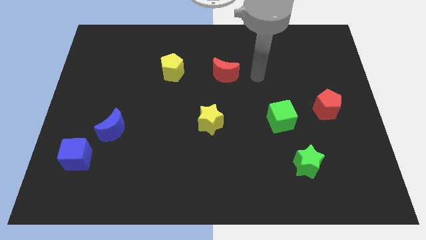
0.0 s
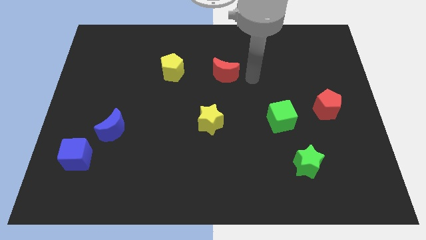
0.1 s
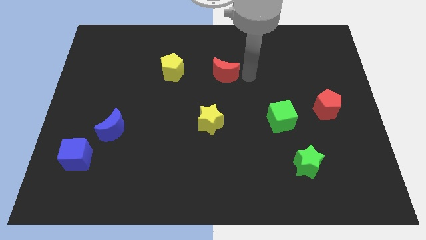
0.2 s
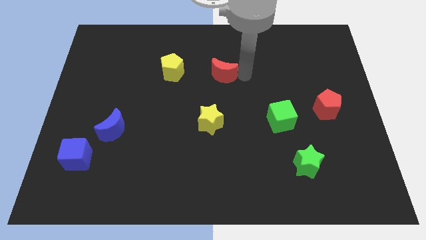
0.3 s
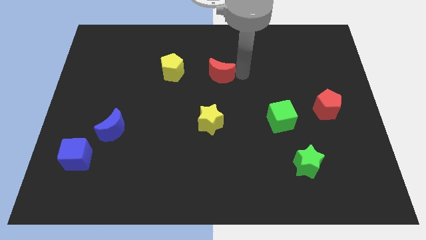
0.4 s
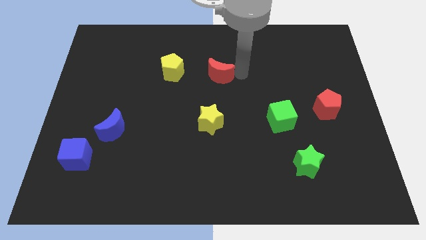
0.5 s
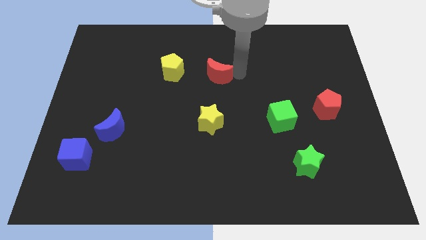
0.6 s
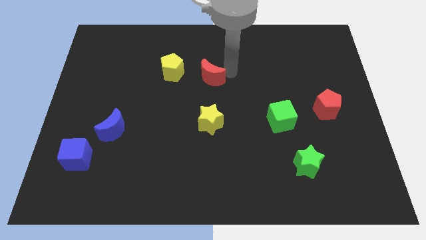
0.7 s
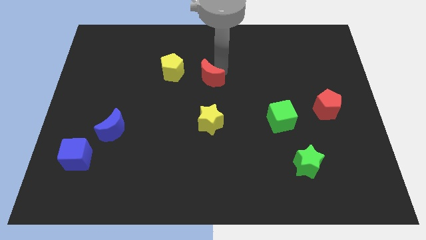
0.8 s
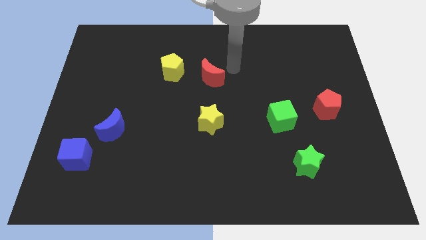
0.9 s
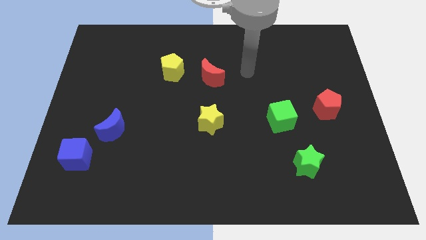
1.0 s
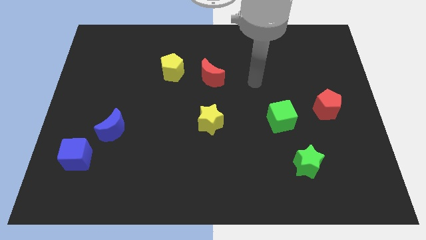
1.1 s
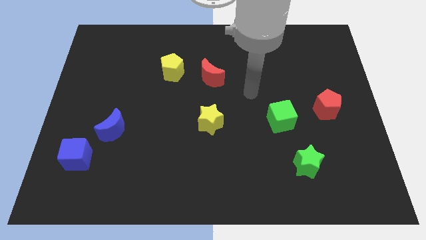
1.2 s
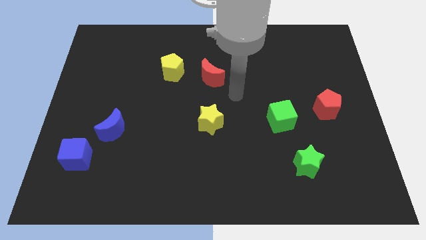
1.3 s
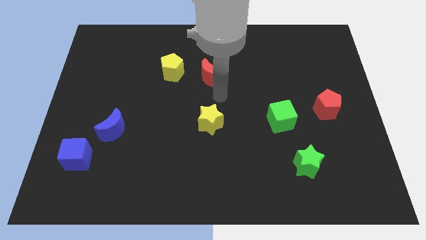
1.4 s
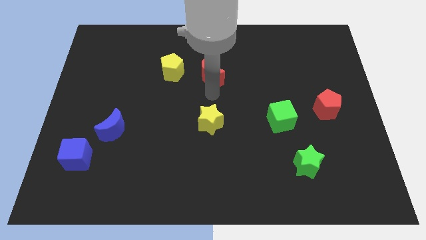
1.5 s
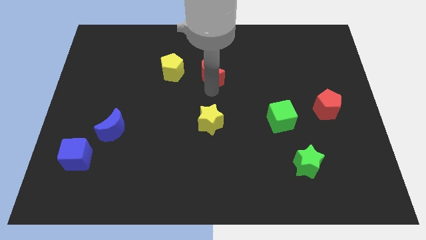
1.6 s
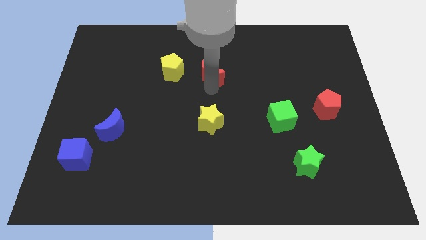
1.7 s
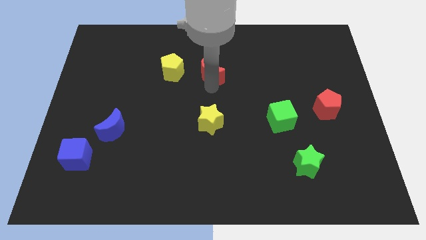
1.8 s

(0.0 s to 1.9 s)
place the red moon to the right side of the yellow pentagon

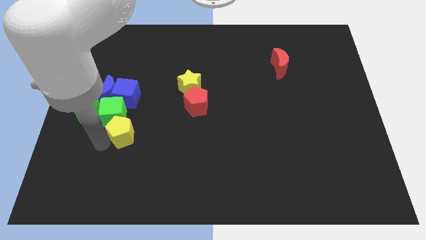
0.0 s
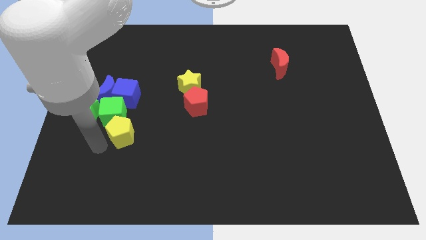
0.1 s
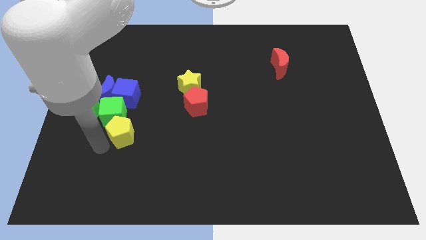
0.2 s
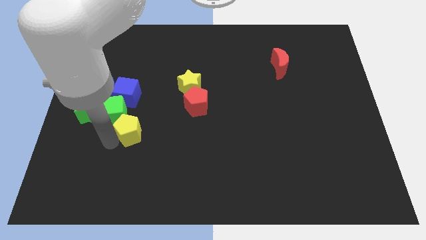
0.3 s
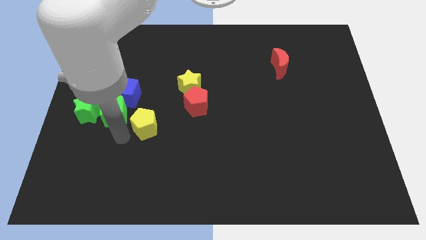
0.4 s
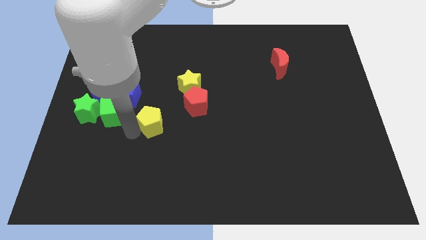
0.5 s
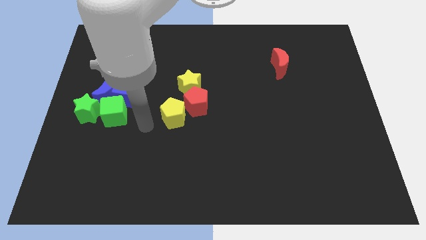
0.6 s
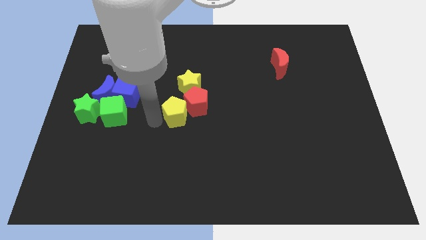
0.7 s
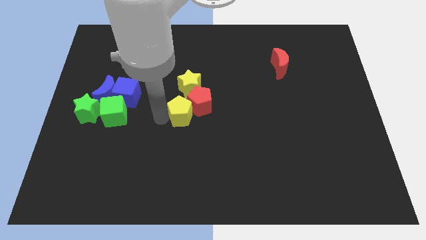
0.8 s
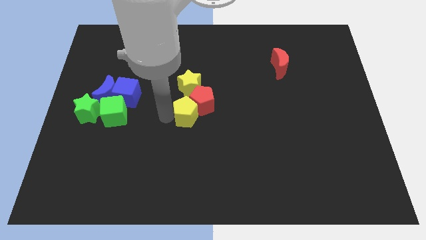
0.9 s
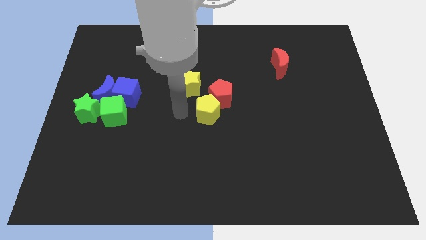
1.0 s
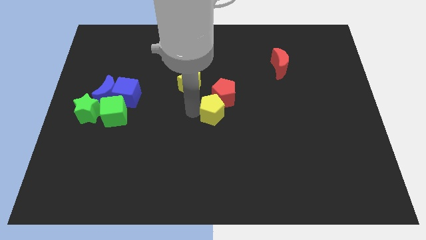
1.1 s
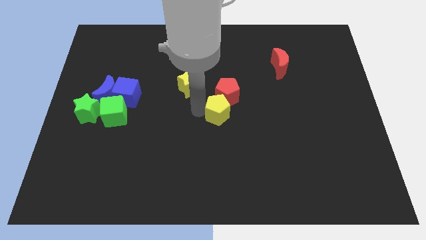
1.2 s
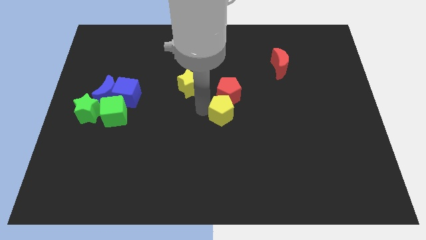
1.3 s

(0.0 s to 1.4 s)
move yellow pentagon into red pentagon

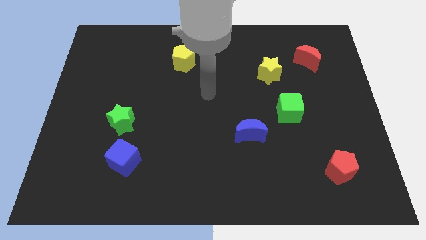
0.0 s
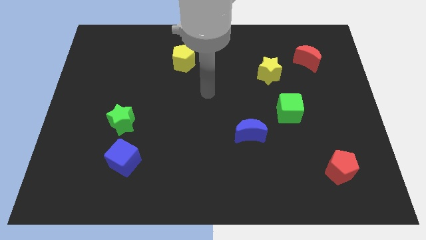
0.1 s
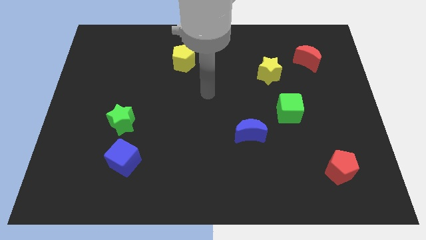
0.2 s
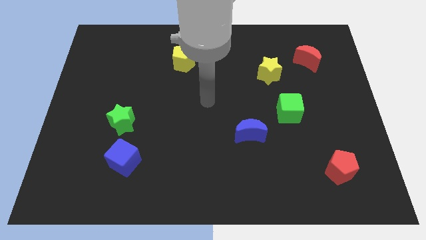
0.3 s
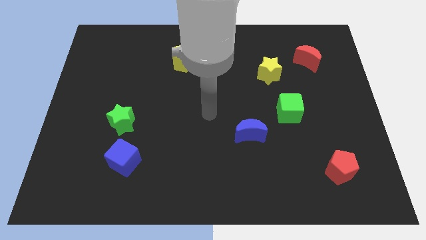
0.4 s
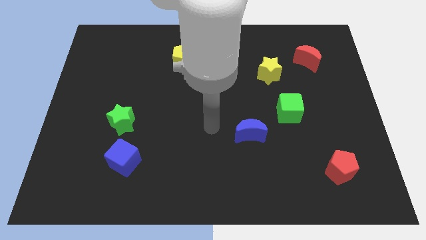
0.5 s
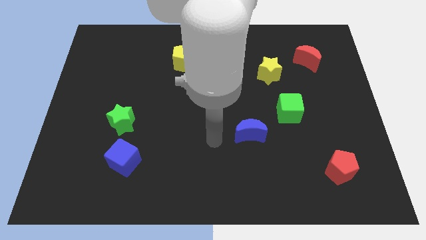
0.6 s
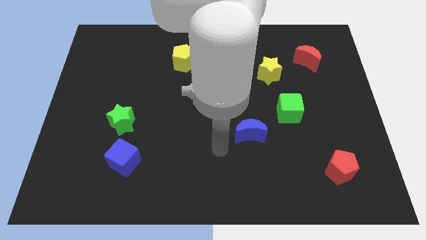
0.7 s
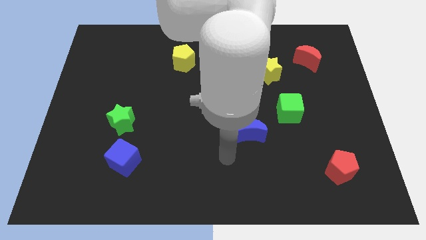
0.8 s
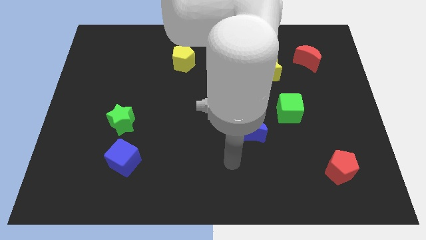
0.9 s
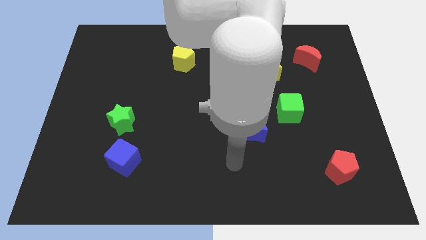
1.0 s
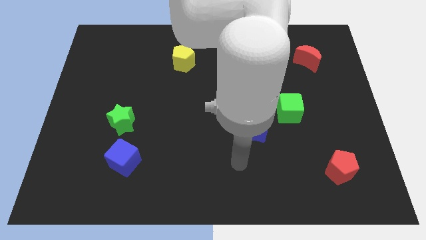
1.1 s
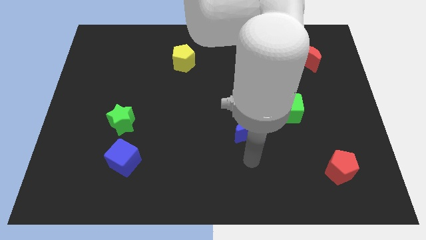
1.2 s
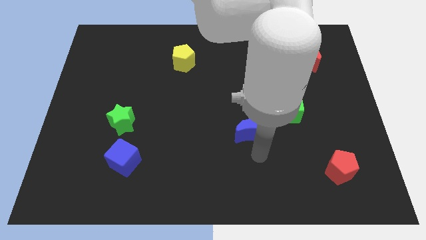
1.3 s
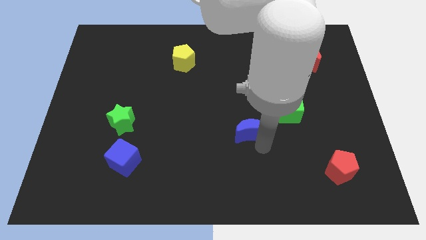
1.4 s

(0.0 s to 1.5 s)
move your arm towards the blue moon

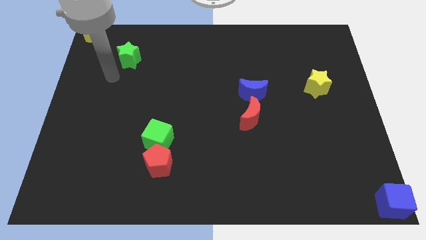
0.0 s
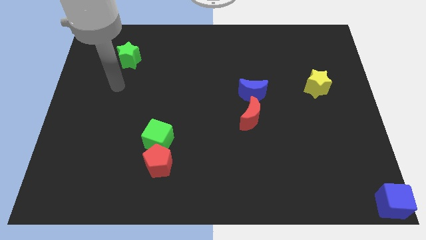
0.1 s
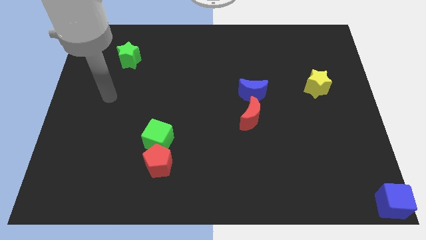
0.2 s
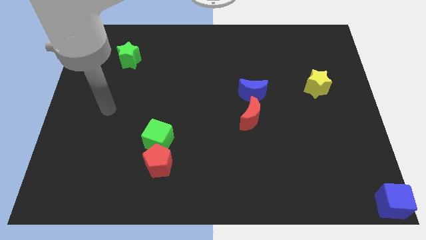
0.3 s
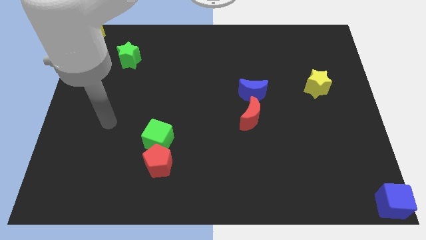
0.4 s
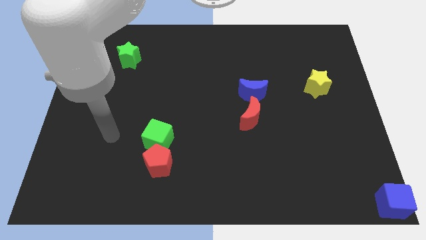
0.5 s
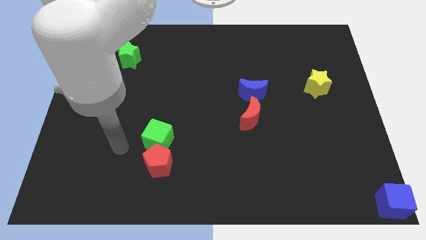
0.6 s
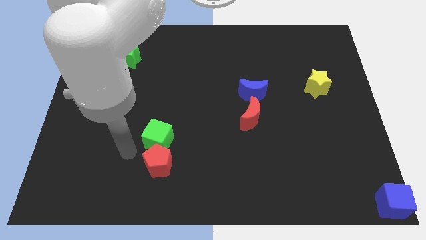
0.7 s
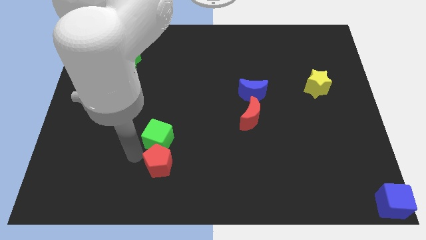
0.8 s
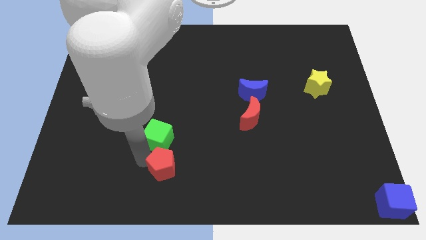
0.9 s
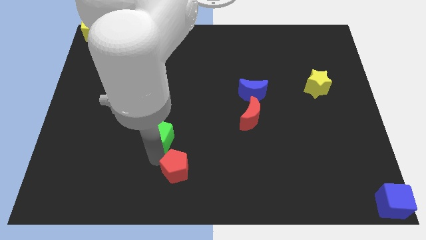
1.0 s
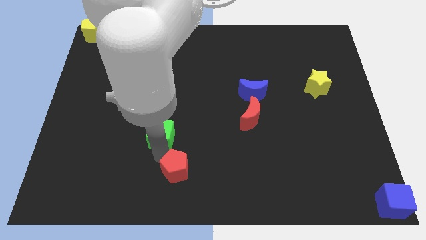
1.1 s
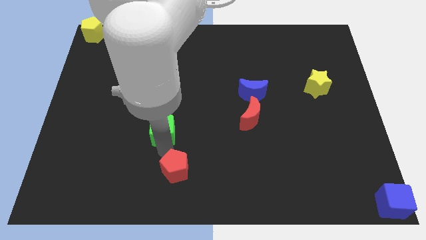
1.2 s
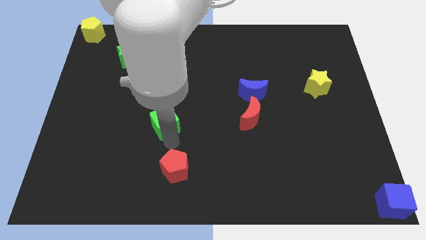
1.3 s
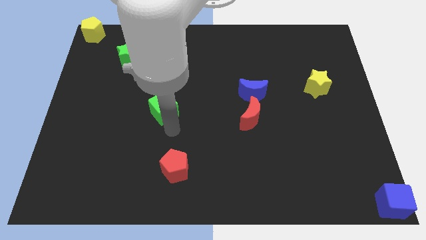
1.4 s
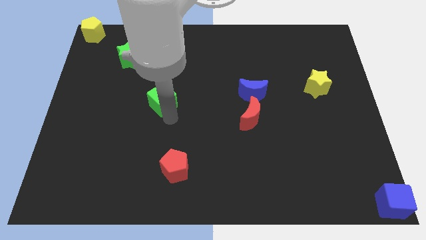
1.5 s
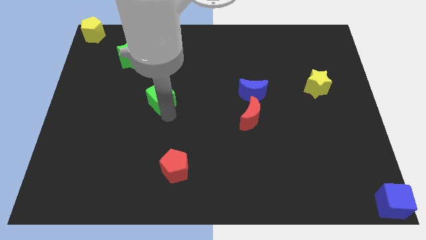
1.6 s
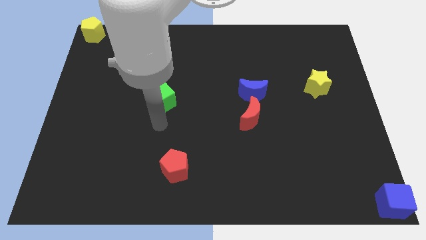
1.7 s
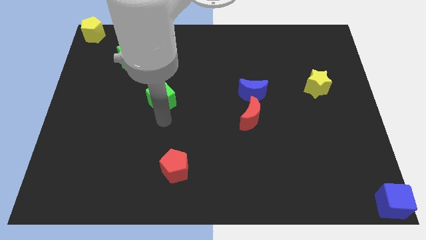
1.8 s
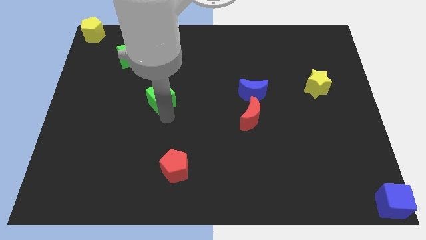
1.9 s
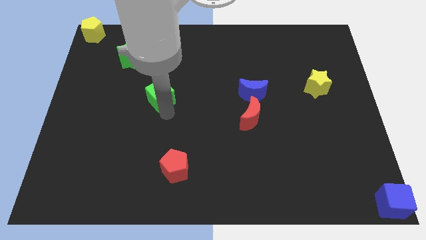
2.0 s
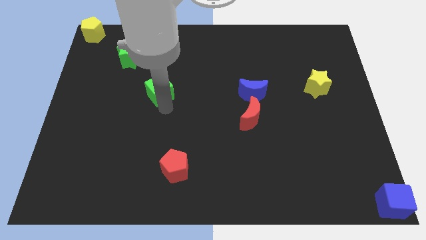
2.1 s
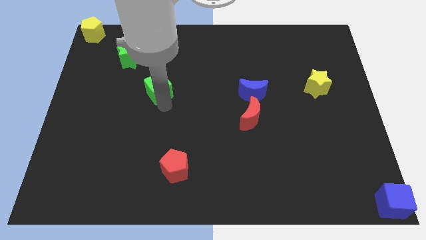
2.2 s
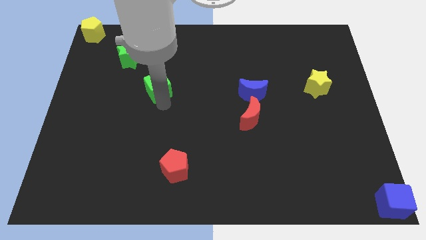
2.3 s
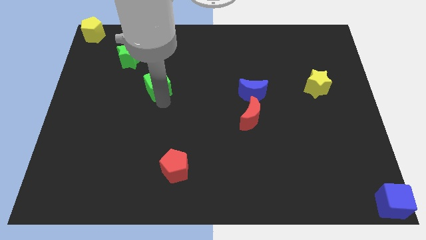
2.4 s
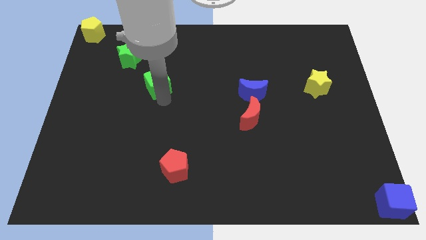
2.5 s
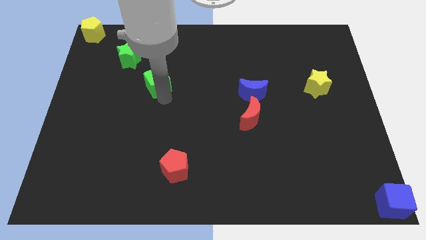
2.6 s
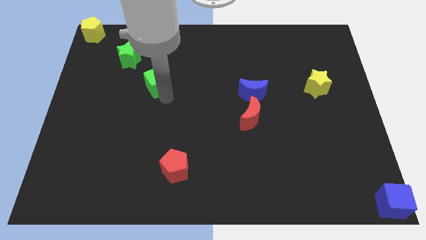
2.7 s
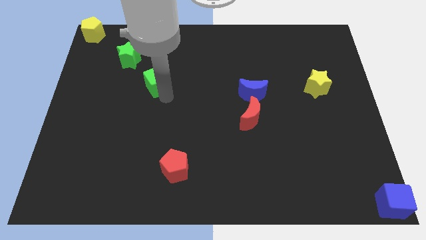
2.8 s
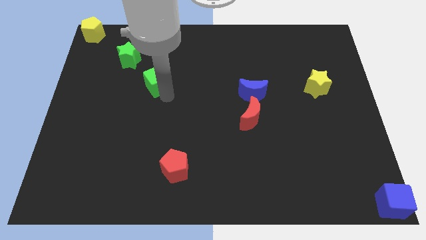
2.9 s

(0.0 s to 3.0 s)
separate green cube from red pentagon

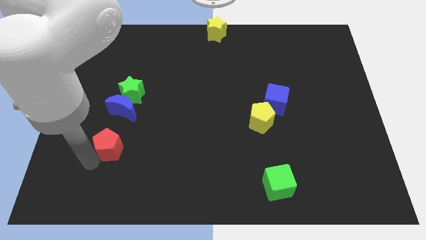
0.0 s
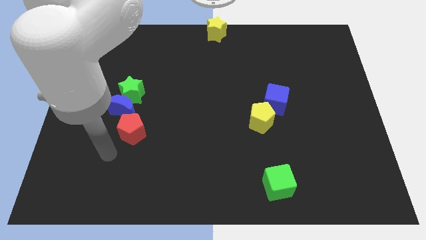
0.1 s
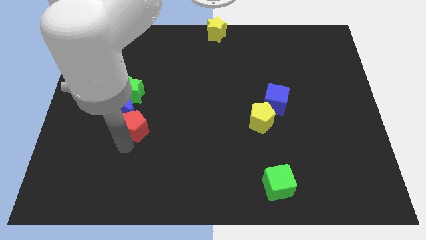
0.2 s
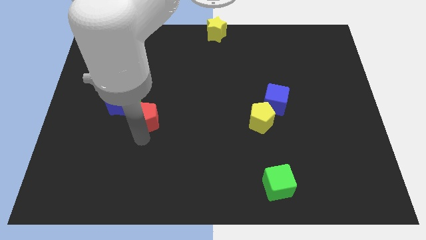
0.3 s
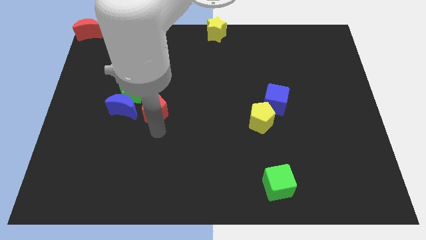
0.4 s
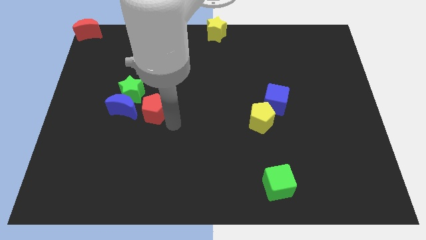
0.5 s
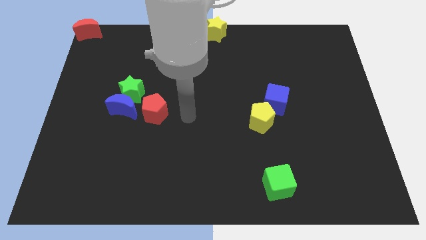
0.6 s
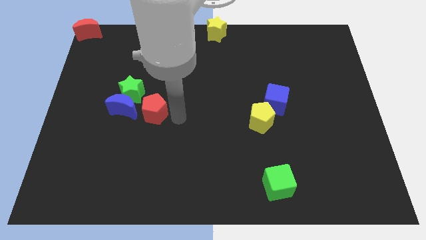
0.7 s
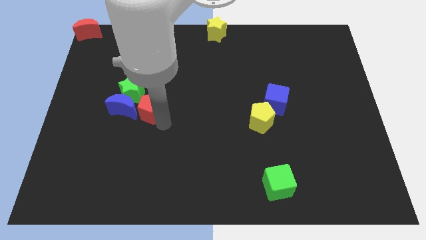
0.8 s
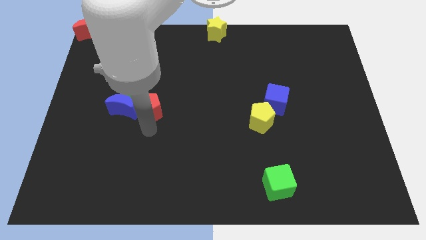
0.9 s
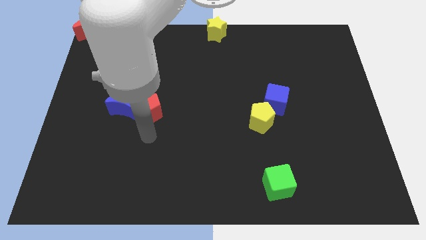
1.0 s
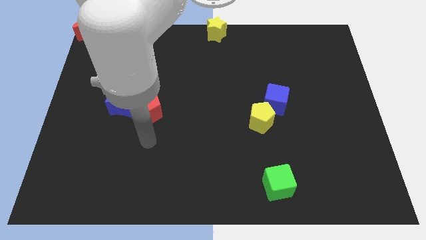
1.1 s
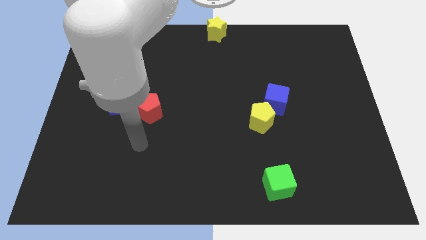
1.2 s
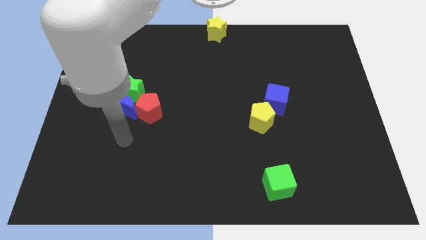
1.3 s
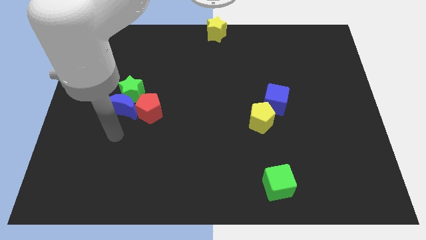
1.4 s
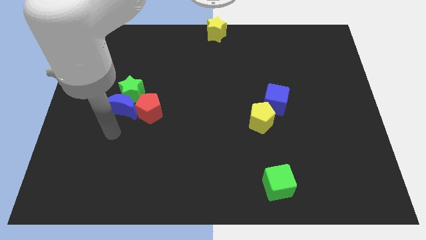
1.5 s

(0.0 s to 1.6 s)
push the red moon into the blue cube
